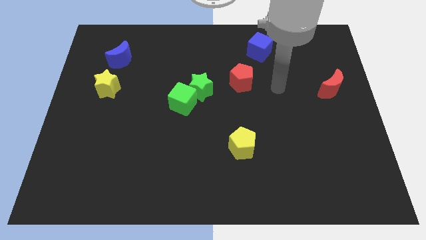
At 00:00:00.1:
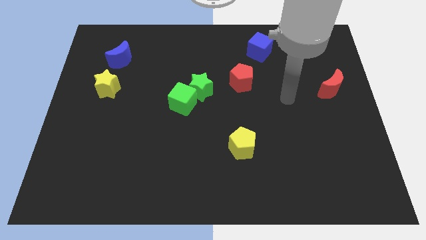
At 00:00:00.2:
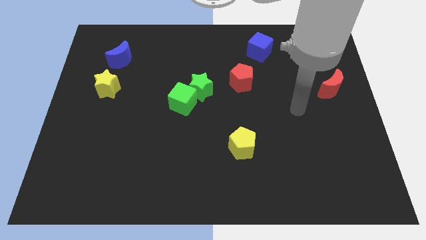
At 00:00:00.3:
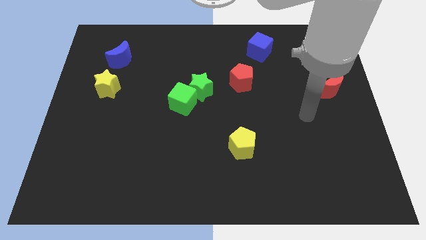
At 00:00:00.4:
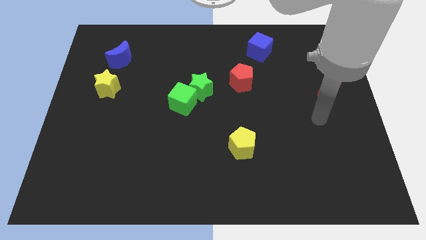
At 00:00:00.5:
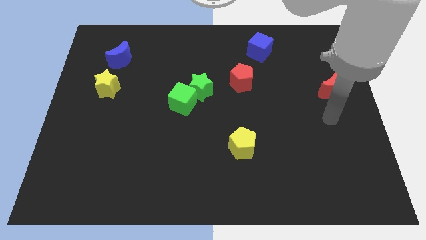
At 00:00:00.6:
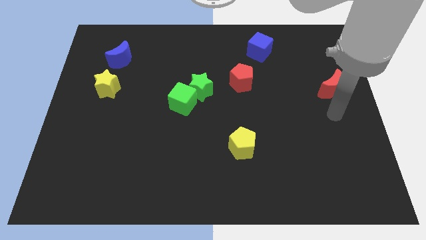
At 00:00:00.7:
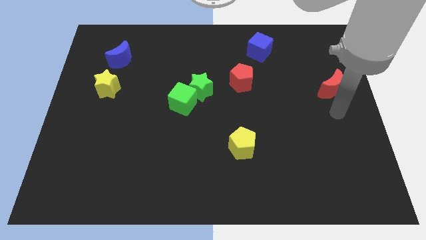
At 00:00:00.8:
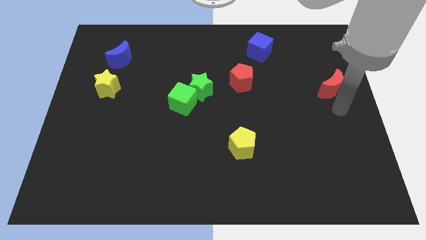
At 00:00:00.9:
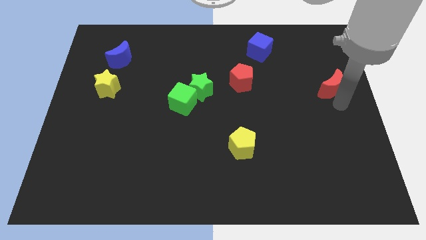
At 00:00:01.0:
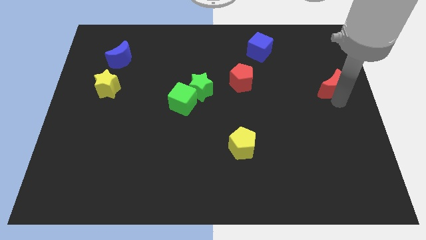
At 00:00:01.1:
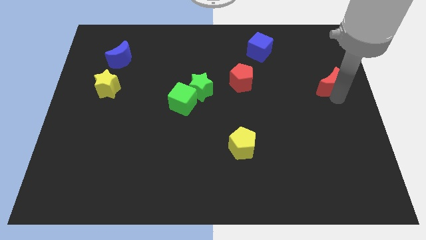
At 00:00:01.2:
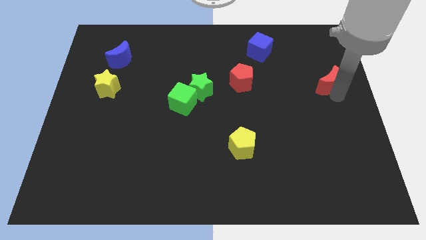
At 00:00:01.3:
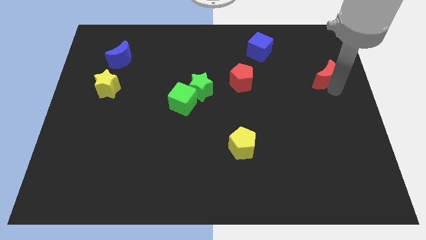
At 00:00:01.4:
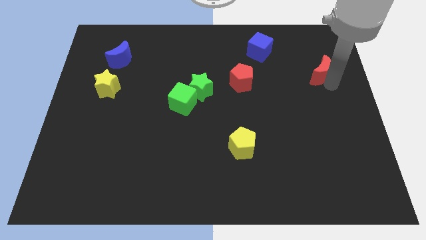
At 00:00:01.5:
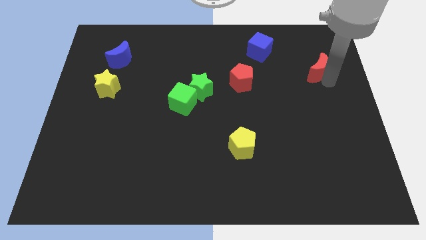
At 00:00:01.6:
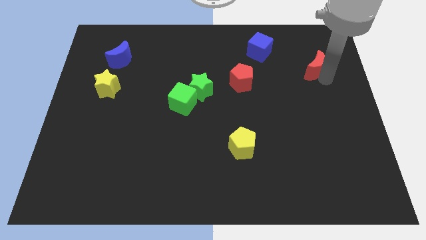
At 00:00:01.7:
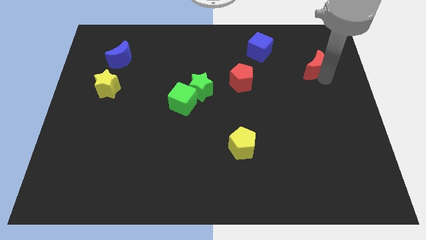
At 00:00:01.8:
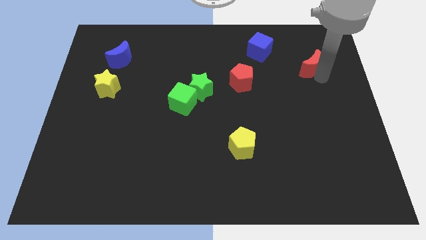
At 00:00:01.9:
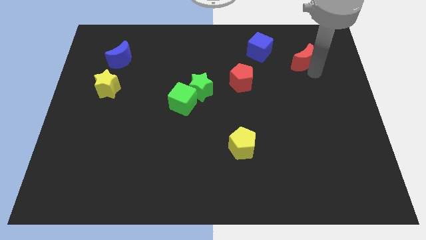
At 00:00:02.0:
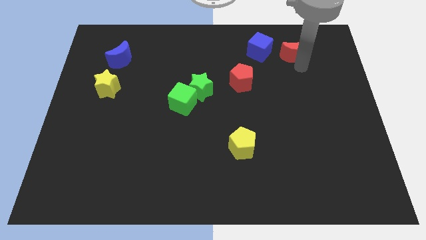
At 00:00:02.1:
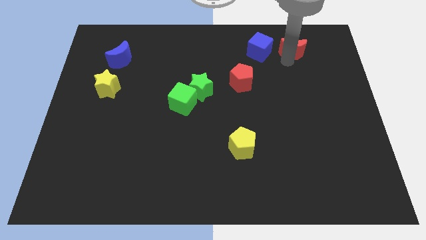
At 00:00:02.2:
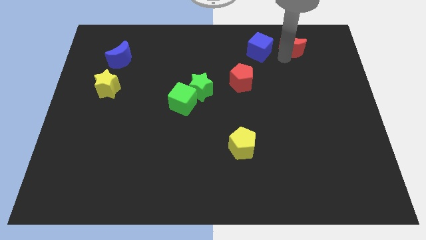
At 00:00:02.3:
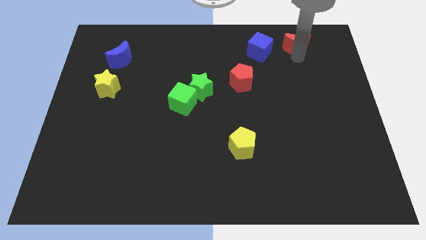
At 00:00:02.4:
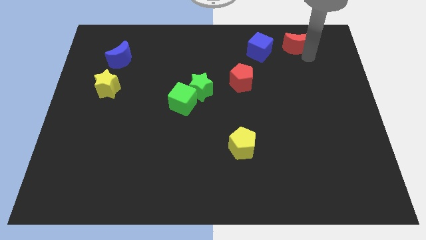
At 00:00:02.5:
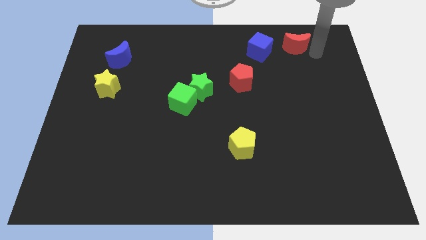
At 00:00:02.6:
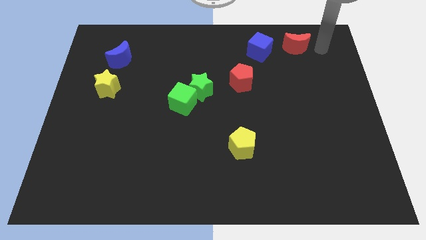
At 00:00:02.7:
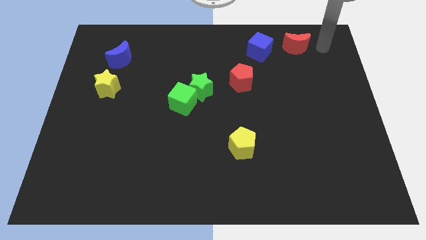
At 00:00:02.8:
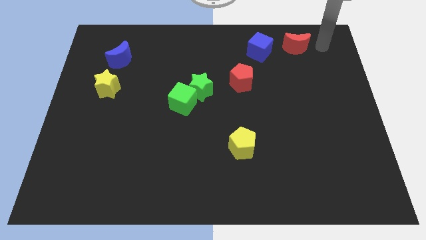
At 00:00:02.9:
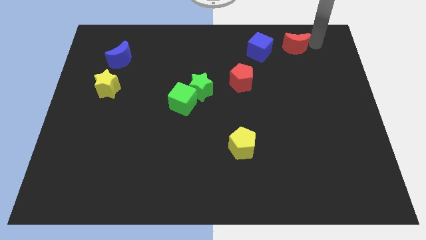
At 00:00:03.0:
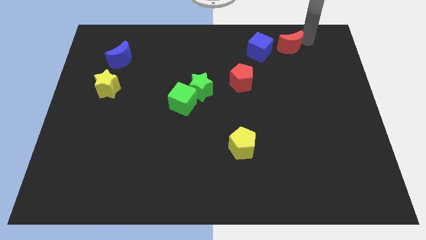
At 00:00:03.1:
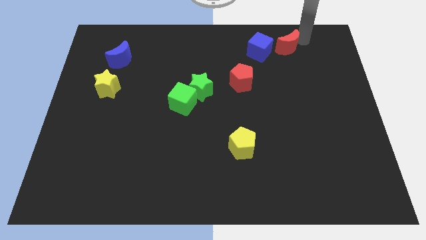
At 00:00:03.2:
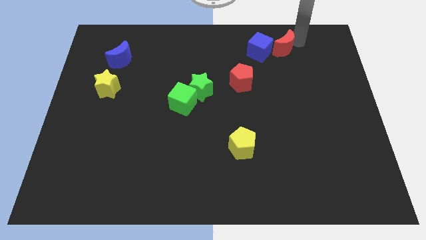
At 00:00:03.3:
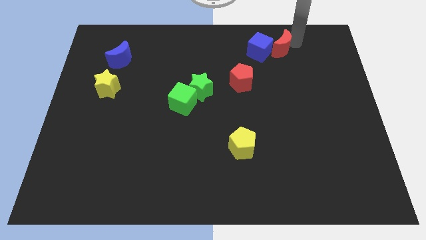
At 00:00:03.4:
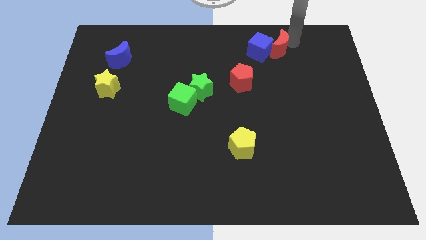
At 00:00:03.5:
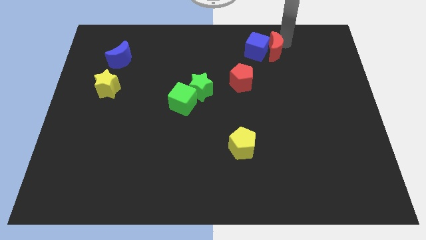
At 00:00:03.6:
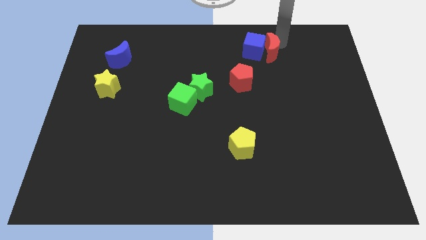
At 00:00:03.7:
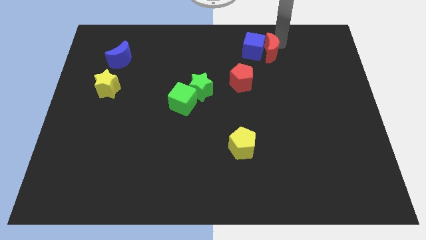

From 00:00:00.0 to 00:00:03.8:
move the red crescent to the right of the blue cube

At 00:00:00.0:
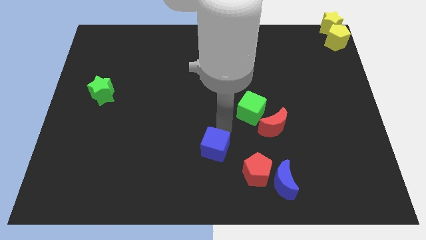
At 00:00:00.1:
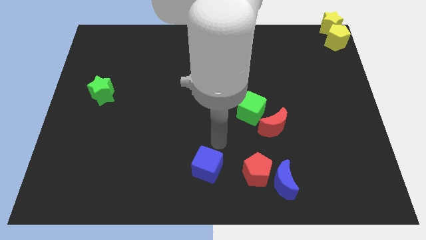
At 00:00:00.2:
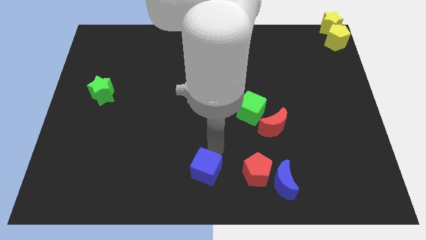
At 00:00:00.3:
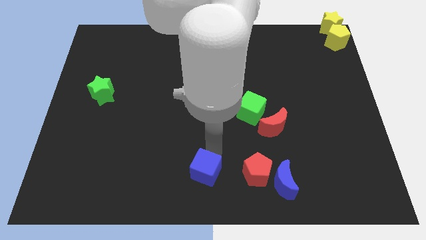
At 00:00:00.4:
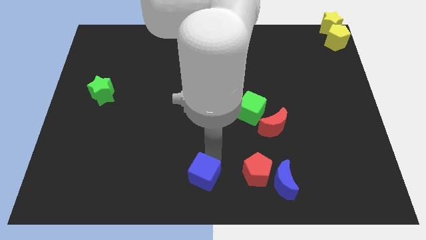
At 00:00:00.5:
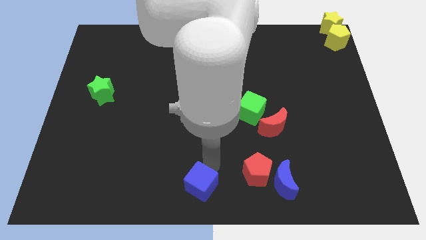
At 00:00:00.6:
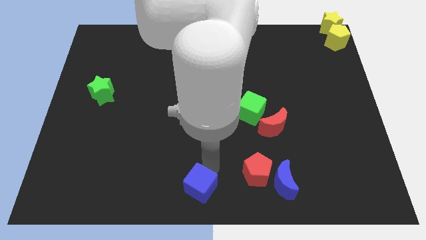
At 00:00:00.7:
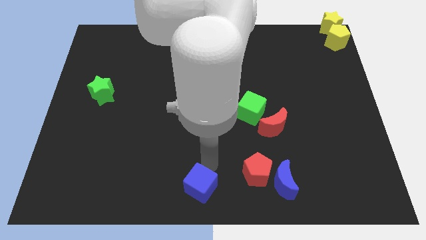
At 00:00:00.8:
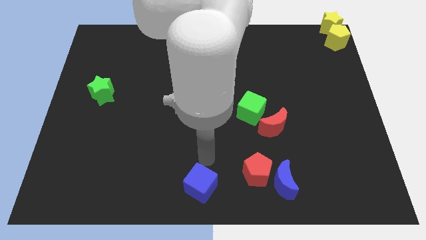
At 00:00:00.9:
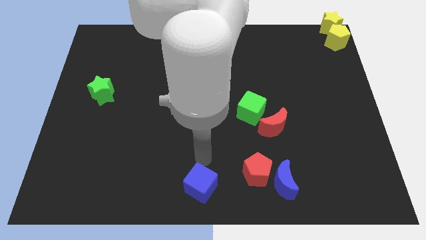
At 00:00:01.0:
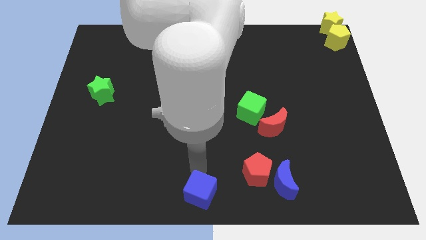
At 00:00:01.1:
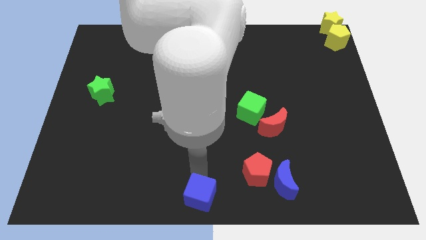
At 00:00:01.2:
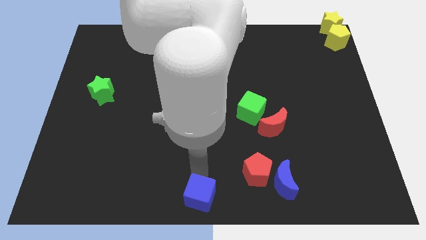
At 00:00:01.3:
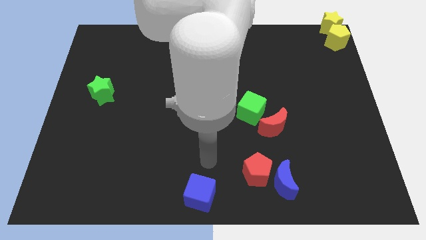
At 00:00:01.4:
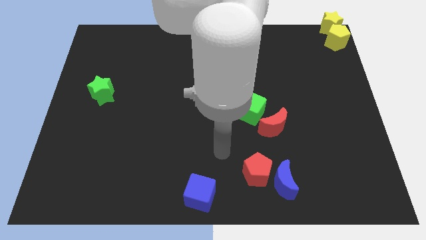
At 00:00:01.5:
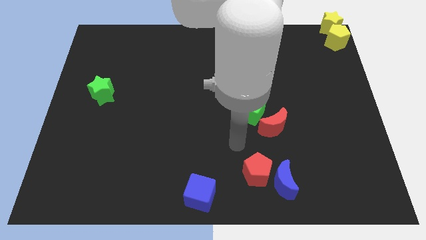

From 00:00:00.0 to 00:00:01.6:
place the blue cube to the bottom center

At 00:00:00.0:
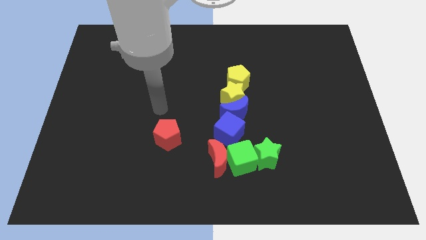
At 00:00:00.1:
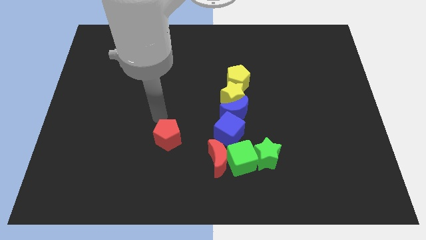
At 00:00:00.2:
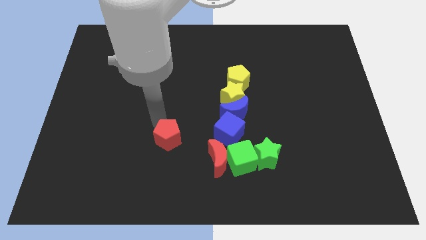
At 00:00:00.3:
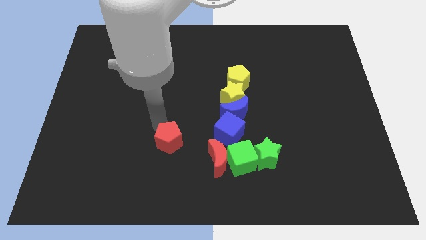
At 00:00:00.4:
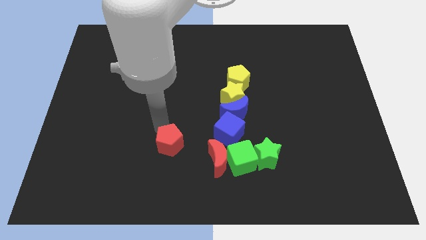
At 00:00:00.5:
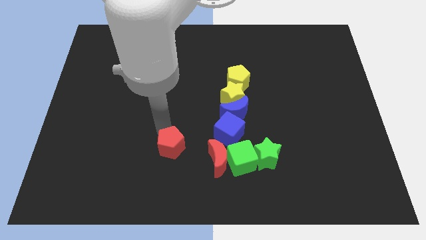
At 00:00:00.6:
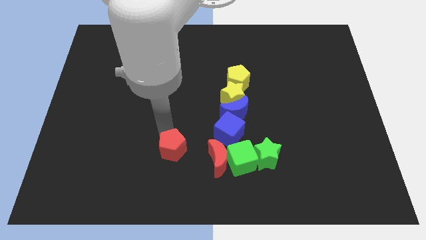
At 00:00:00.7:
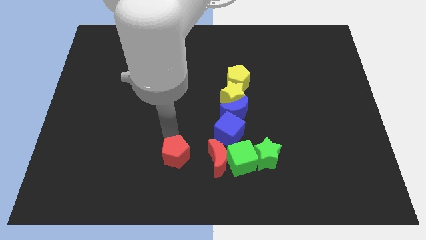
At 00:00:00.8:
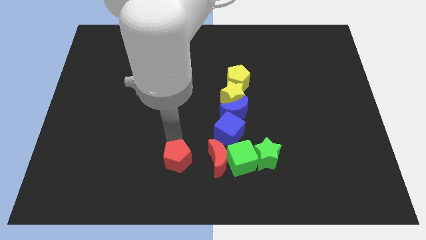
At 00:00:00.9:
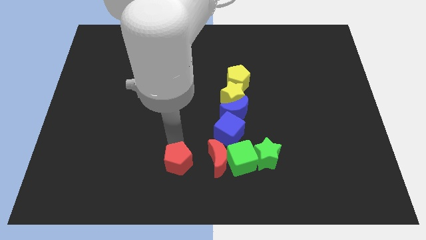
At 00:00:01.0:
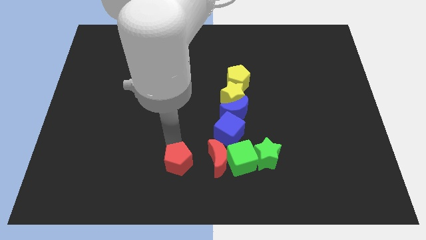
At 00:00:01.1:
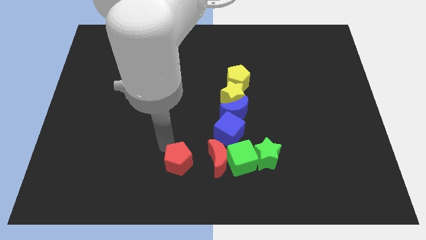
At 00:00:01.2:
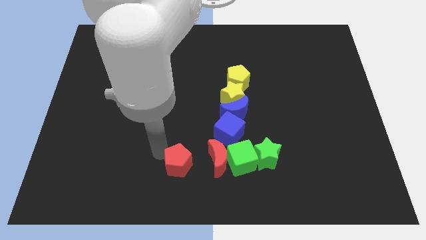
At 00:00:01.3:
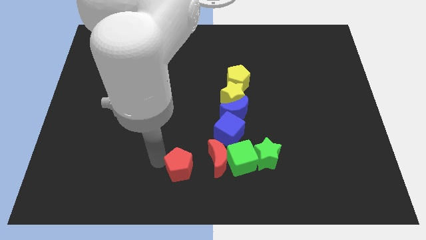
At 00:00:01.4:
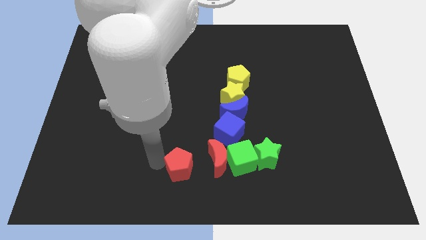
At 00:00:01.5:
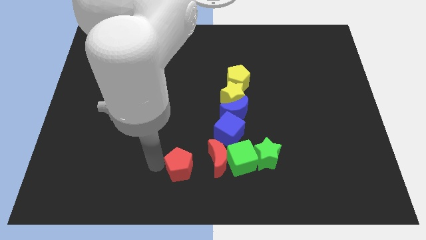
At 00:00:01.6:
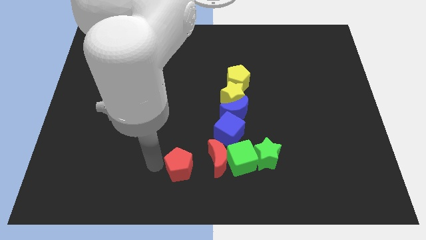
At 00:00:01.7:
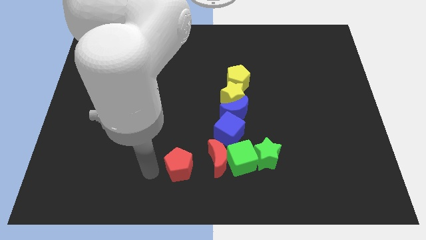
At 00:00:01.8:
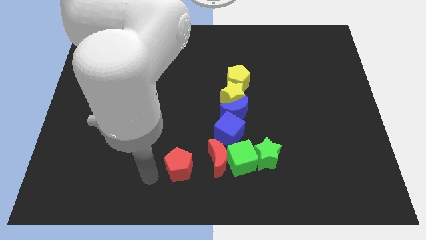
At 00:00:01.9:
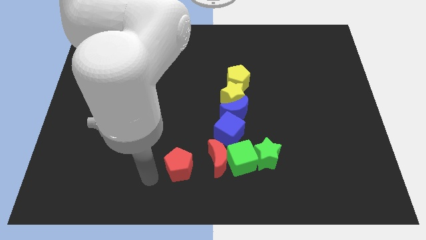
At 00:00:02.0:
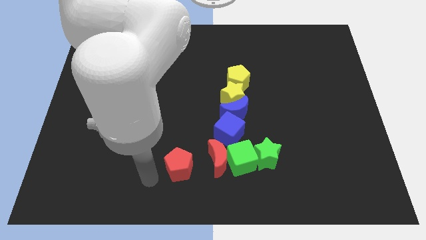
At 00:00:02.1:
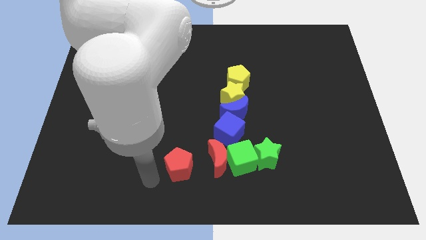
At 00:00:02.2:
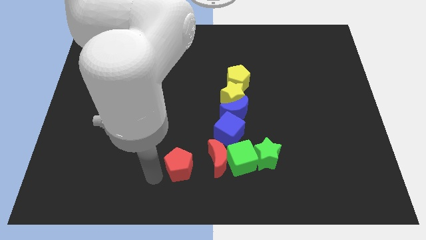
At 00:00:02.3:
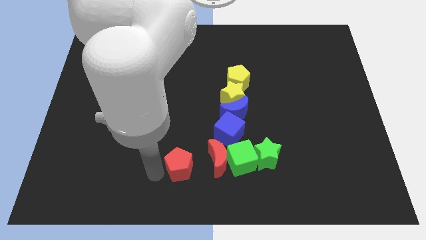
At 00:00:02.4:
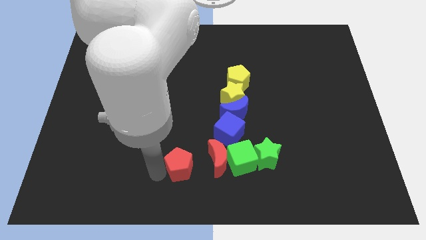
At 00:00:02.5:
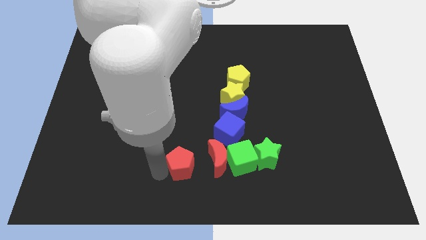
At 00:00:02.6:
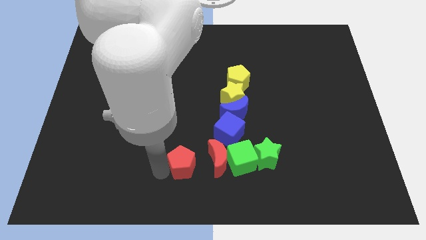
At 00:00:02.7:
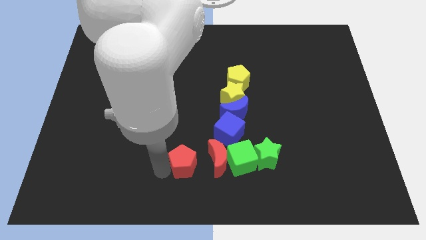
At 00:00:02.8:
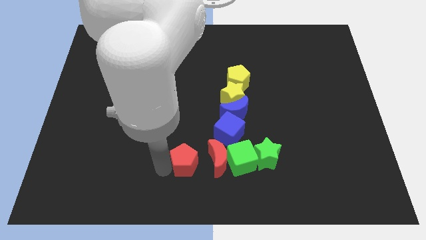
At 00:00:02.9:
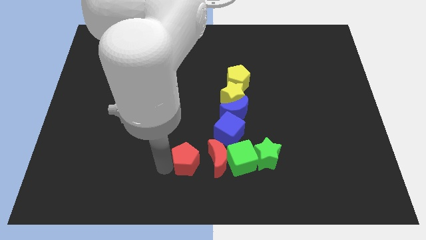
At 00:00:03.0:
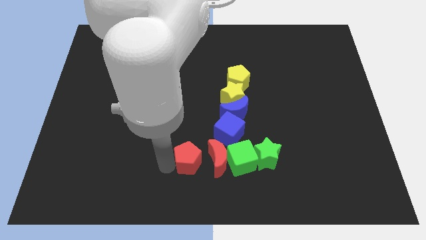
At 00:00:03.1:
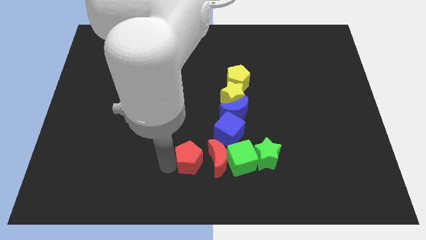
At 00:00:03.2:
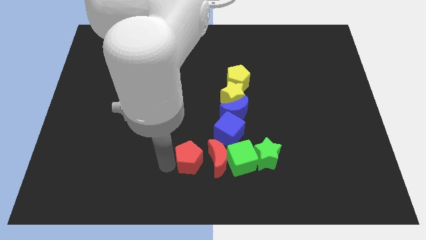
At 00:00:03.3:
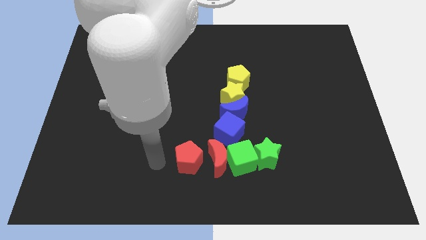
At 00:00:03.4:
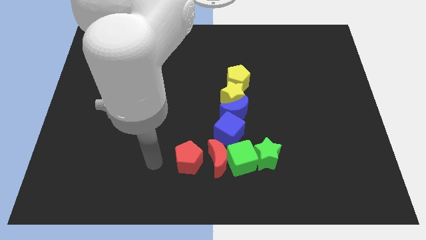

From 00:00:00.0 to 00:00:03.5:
place the re pentagon horizontal left of red crescent
